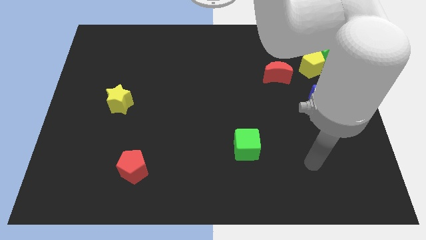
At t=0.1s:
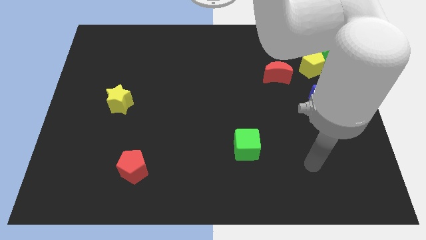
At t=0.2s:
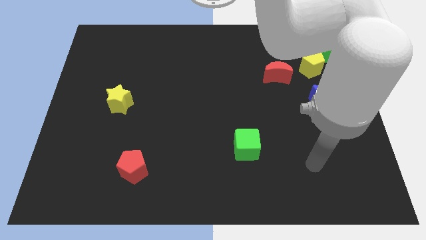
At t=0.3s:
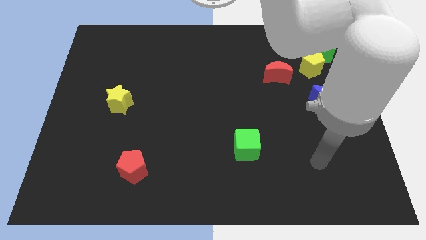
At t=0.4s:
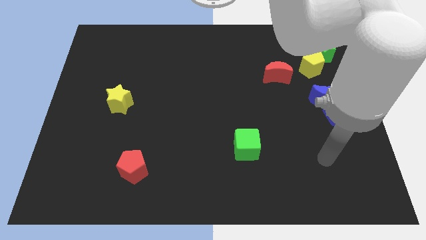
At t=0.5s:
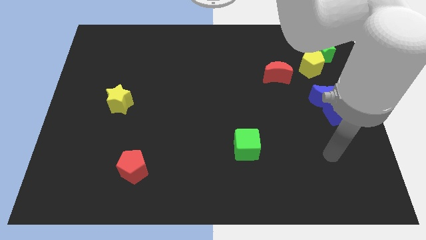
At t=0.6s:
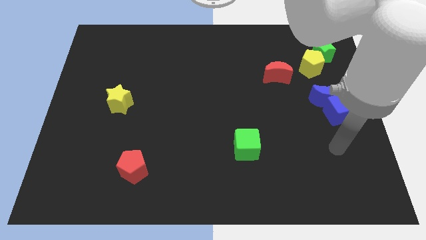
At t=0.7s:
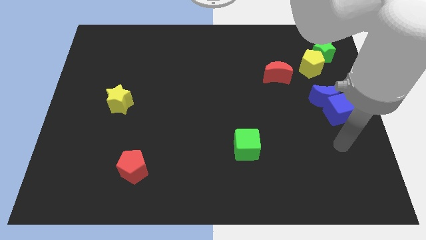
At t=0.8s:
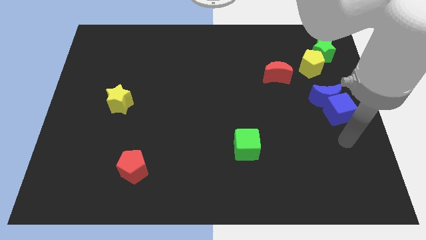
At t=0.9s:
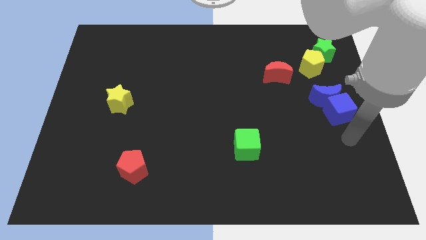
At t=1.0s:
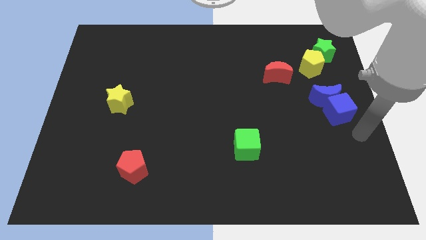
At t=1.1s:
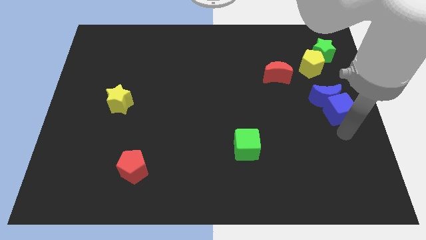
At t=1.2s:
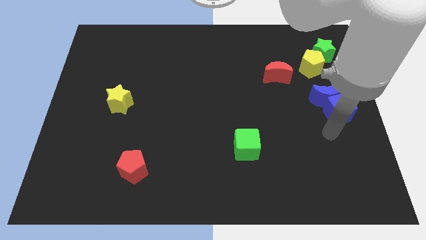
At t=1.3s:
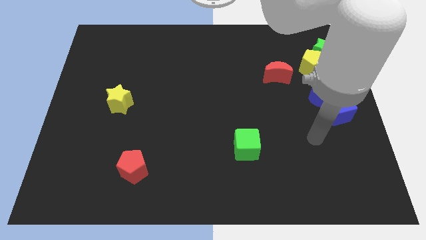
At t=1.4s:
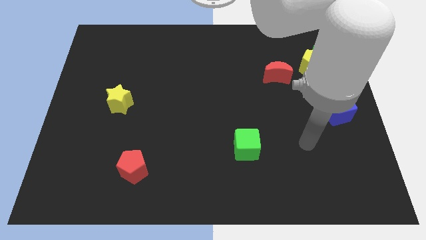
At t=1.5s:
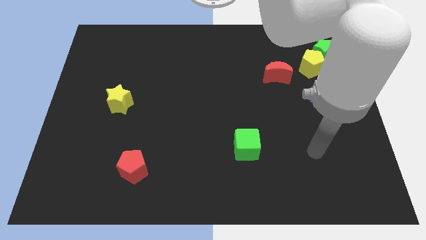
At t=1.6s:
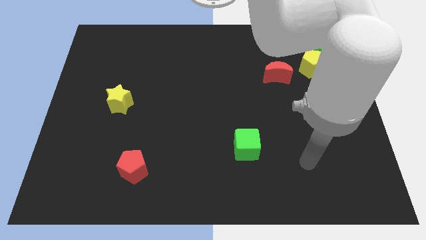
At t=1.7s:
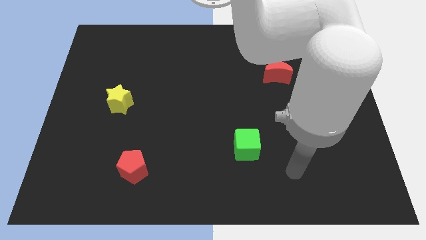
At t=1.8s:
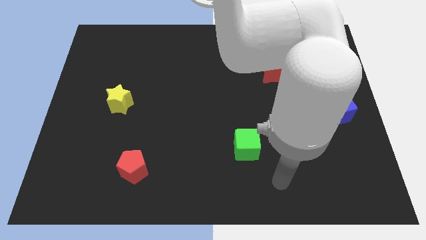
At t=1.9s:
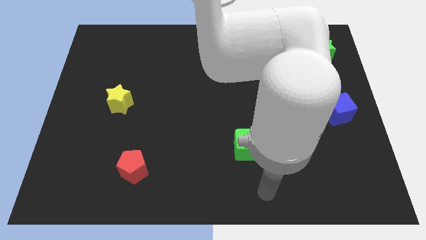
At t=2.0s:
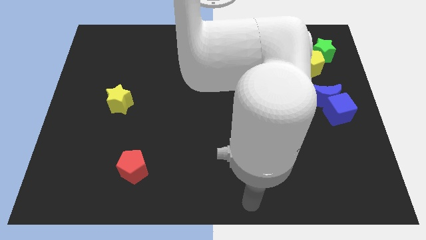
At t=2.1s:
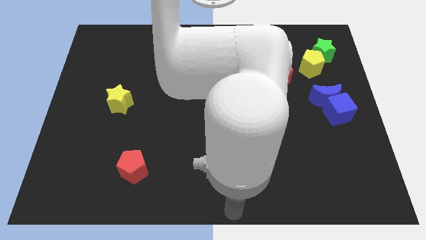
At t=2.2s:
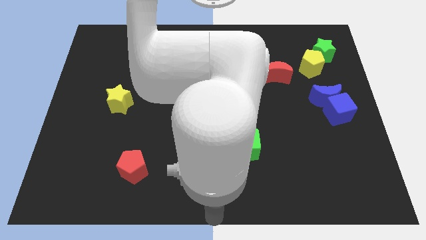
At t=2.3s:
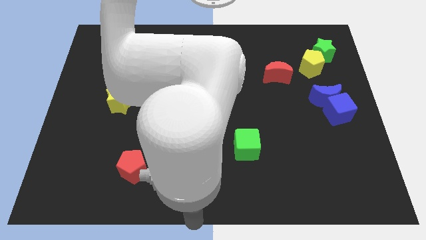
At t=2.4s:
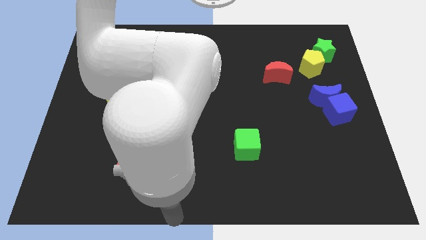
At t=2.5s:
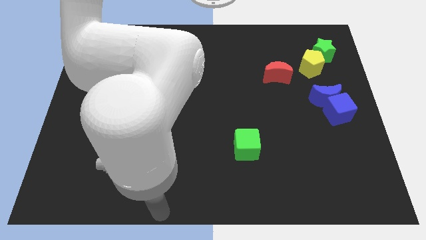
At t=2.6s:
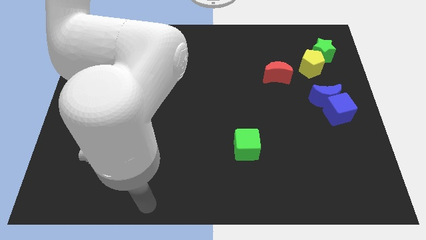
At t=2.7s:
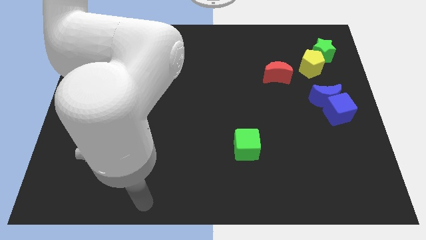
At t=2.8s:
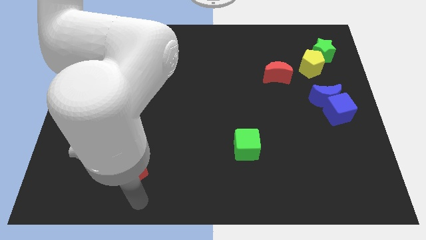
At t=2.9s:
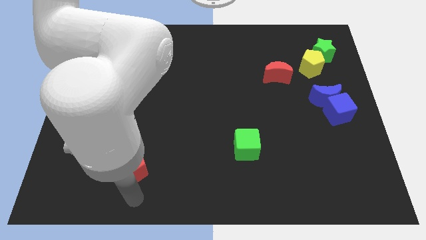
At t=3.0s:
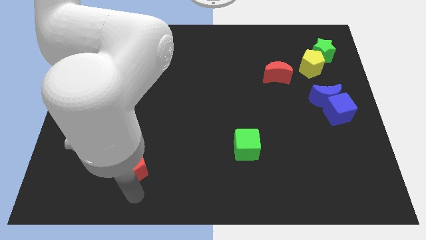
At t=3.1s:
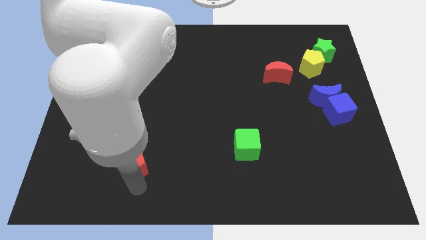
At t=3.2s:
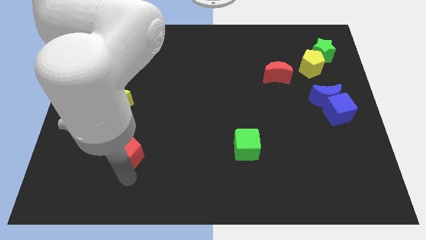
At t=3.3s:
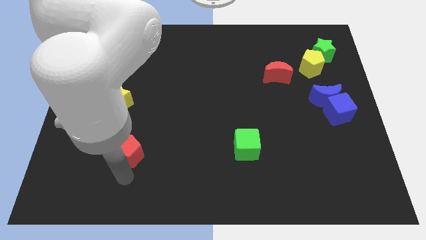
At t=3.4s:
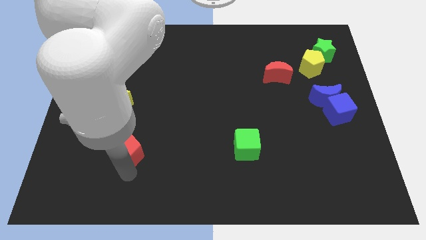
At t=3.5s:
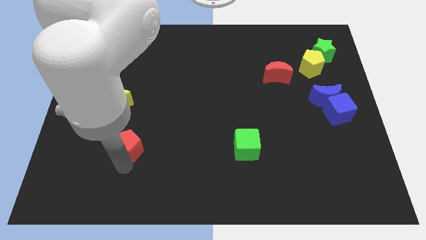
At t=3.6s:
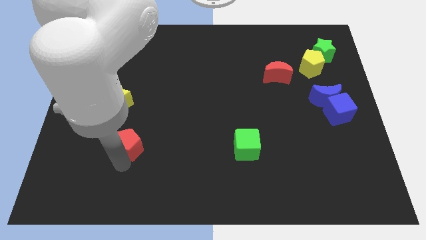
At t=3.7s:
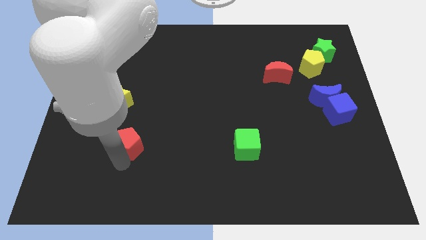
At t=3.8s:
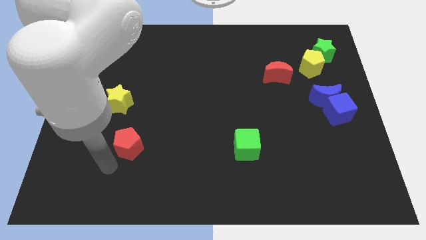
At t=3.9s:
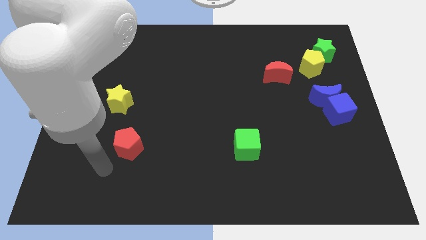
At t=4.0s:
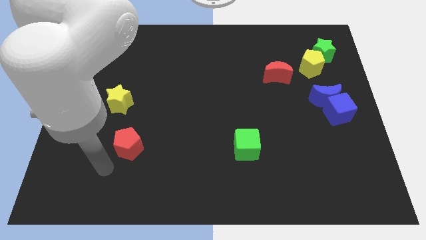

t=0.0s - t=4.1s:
move red pentagon below right to the yellow star

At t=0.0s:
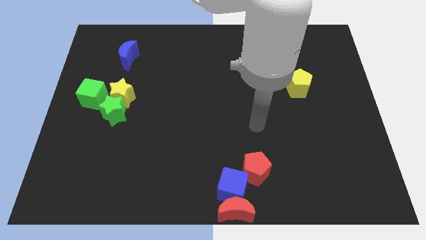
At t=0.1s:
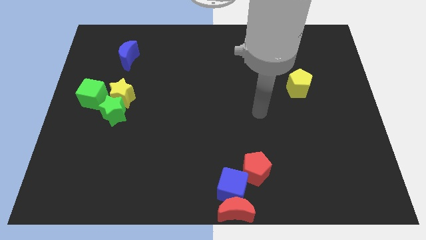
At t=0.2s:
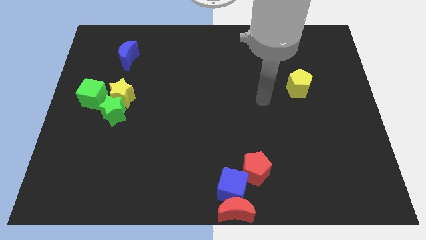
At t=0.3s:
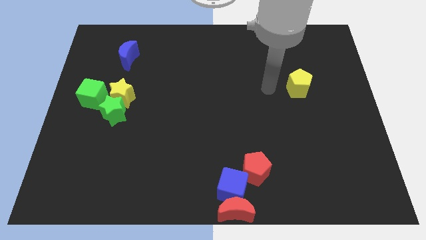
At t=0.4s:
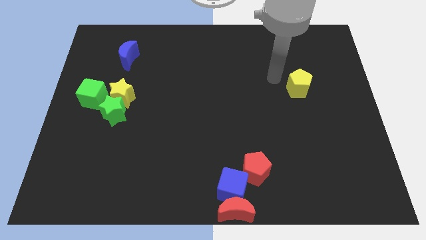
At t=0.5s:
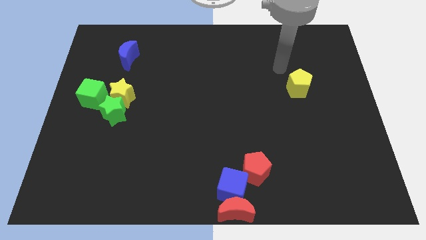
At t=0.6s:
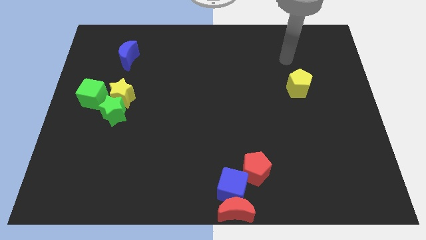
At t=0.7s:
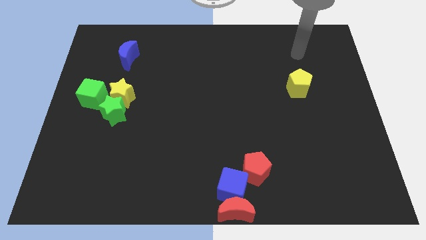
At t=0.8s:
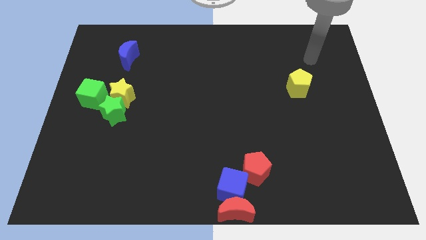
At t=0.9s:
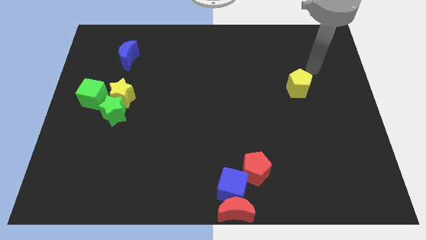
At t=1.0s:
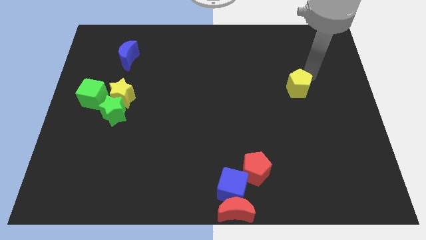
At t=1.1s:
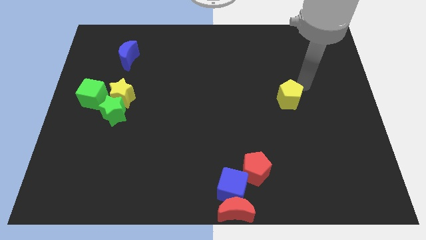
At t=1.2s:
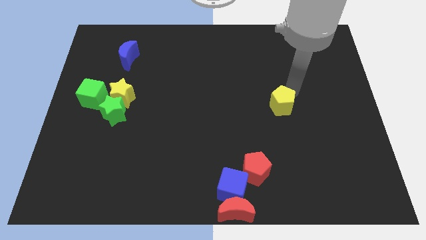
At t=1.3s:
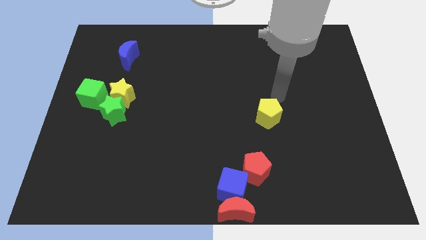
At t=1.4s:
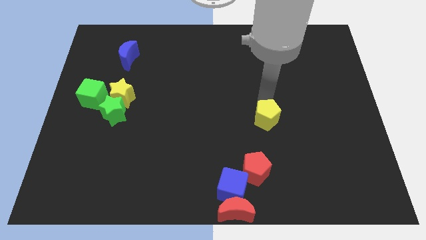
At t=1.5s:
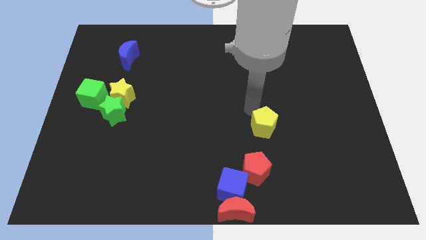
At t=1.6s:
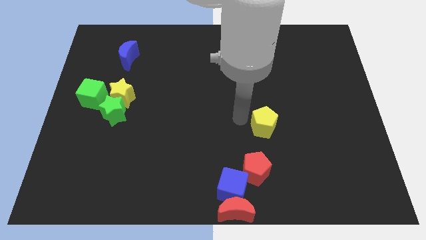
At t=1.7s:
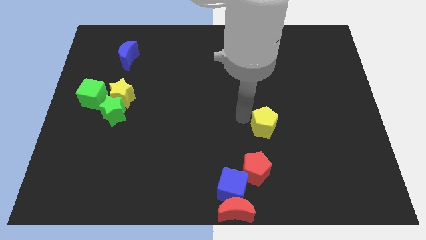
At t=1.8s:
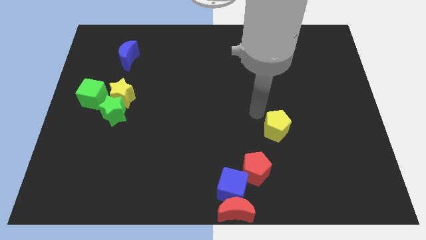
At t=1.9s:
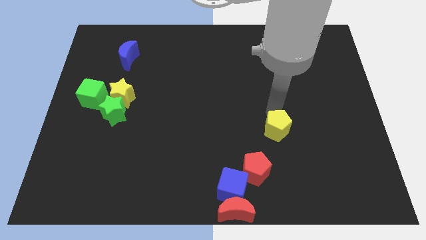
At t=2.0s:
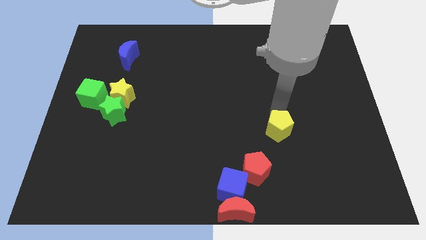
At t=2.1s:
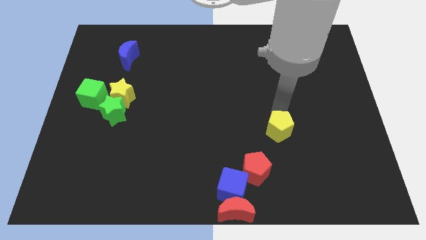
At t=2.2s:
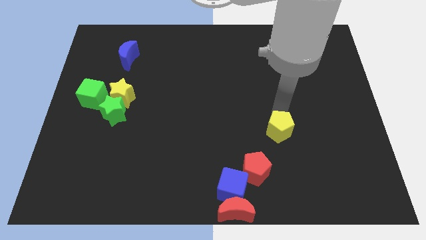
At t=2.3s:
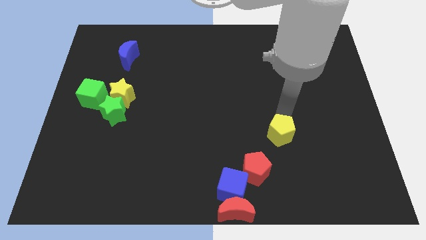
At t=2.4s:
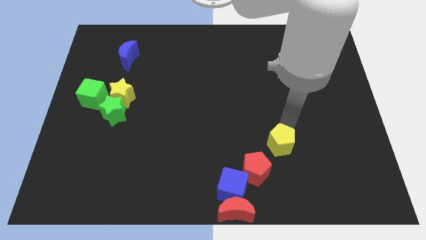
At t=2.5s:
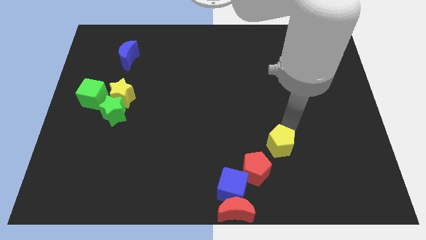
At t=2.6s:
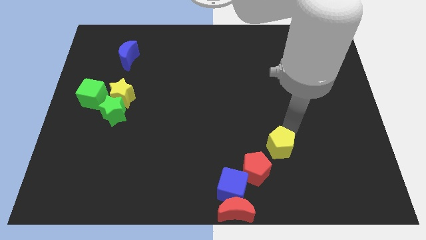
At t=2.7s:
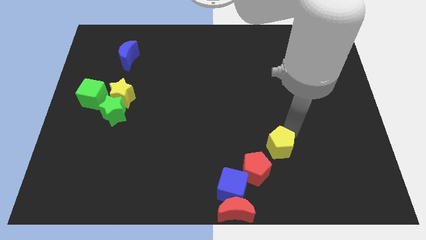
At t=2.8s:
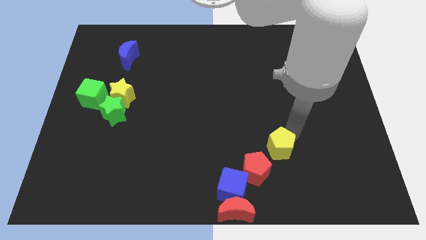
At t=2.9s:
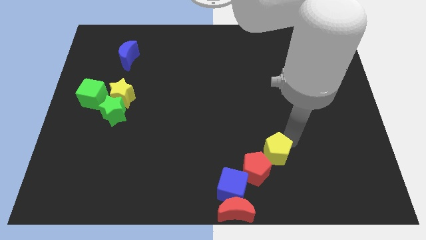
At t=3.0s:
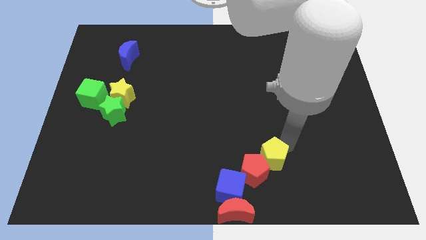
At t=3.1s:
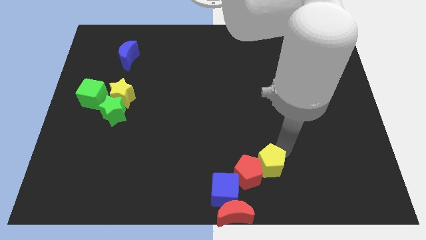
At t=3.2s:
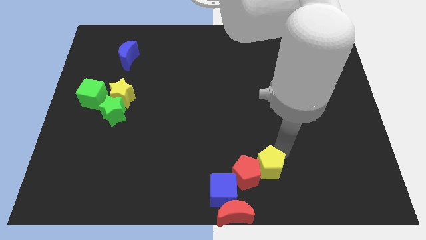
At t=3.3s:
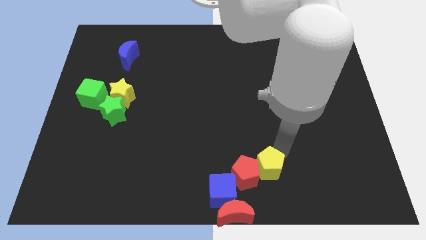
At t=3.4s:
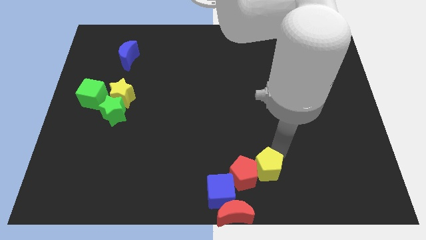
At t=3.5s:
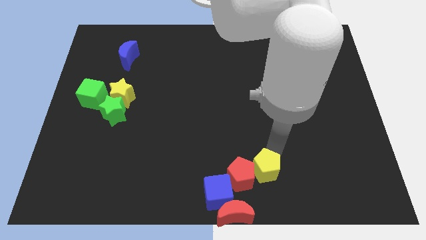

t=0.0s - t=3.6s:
push the yellow pentagon into the red pentagon

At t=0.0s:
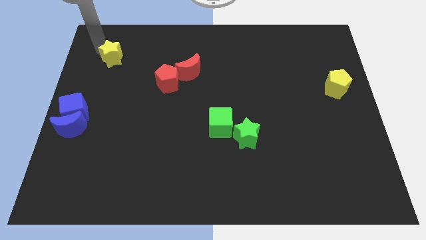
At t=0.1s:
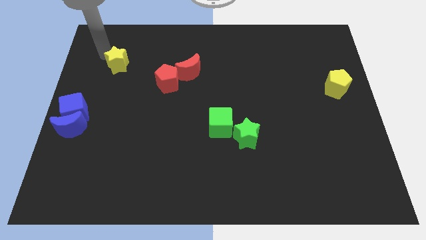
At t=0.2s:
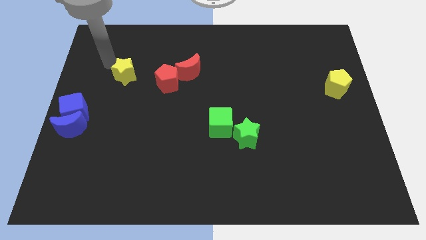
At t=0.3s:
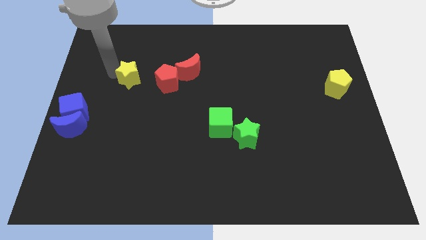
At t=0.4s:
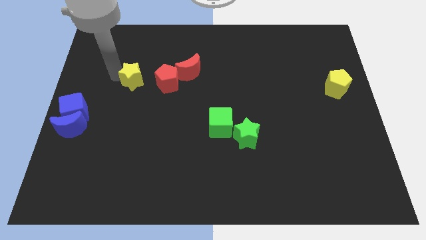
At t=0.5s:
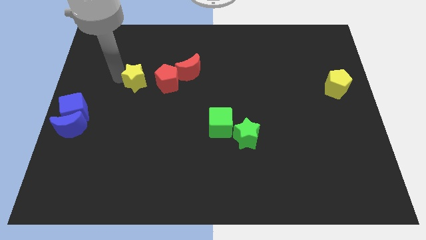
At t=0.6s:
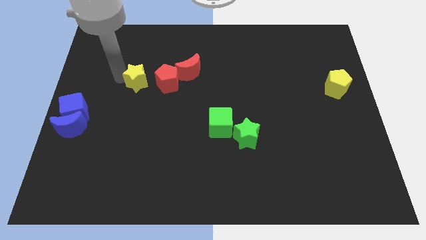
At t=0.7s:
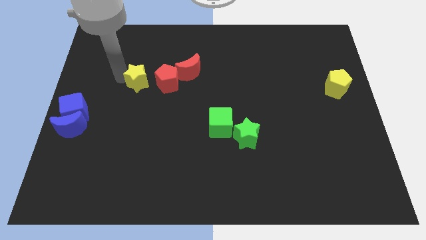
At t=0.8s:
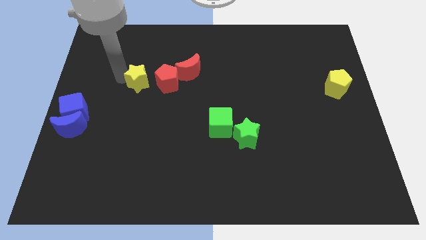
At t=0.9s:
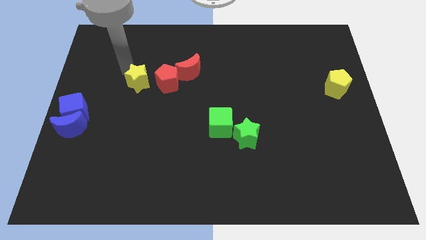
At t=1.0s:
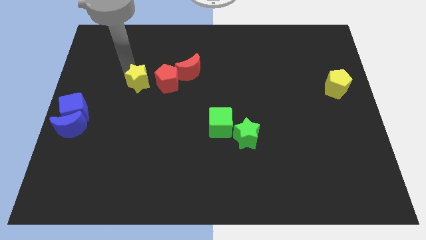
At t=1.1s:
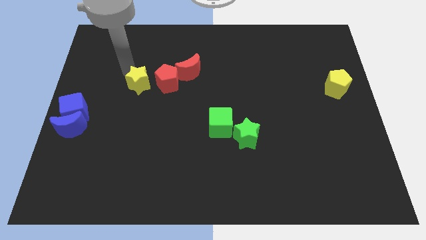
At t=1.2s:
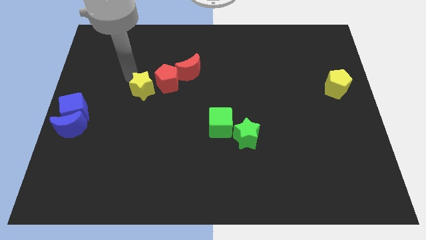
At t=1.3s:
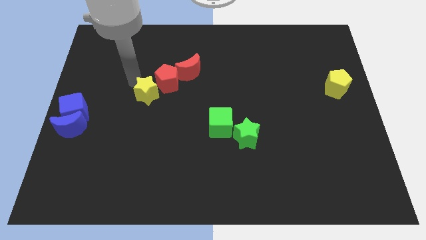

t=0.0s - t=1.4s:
place yellow star to the left of red pentagon
